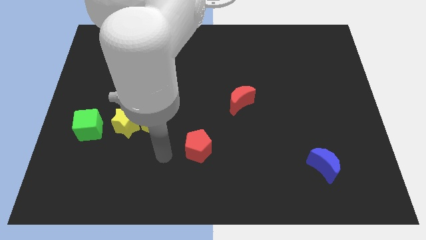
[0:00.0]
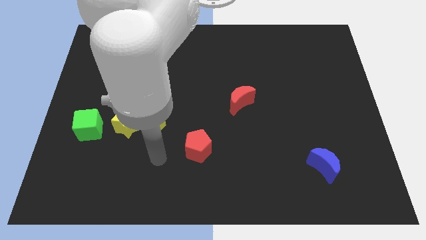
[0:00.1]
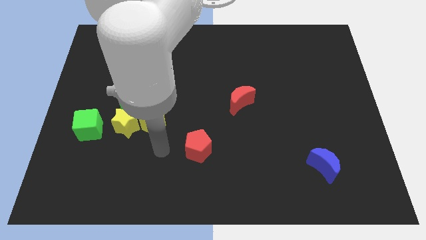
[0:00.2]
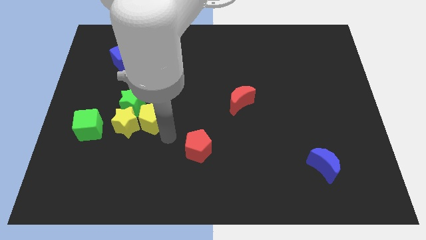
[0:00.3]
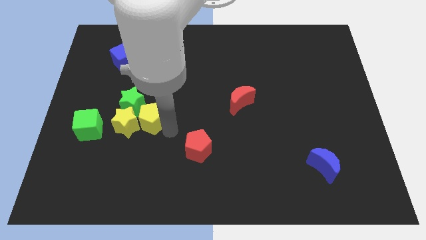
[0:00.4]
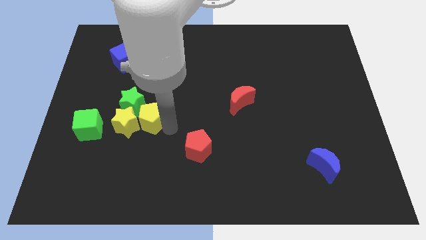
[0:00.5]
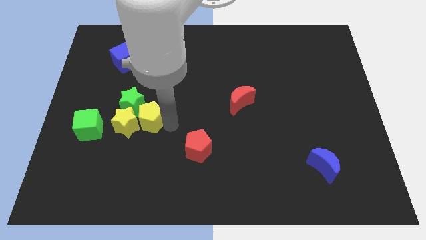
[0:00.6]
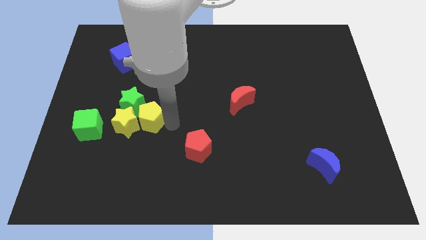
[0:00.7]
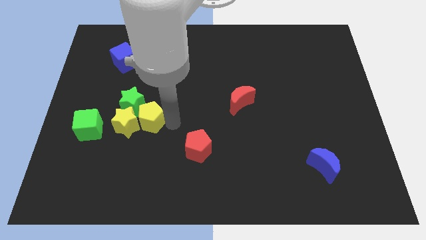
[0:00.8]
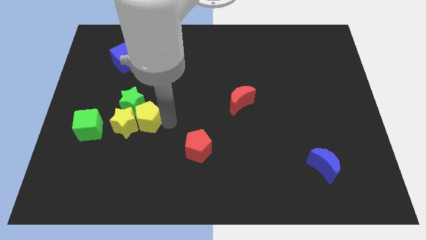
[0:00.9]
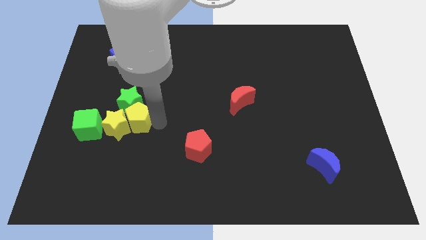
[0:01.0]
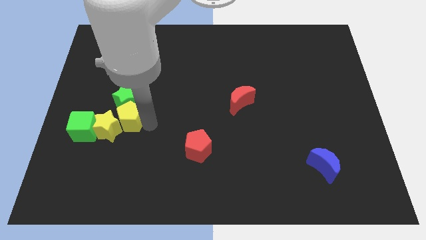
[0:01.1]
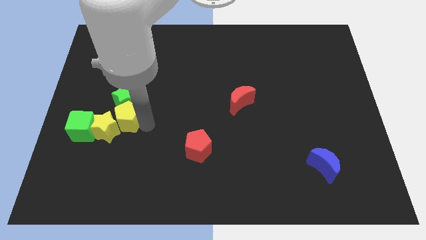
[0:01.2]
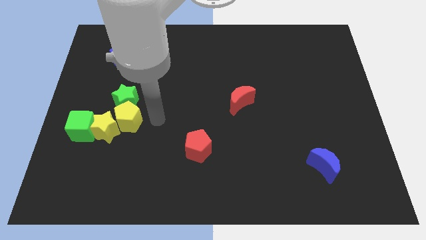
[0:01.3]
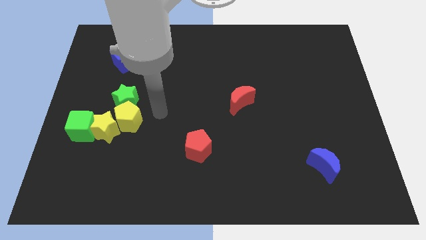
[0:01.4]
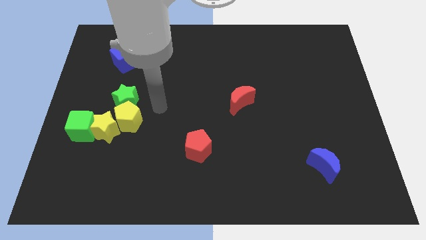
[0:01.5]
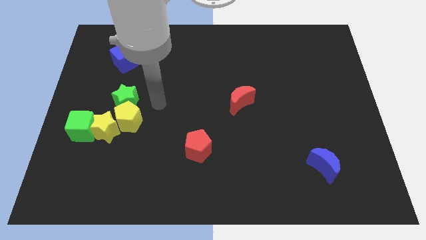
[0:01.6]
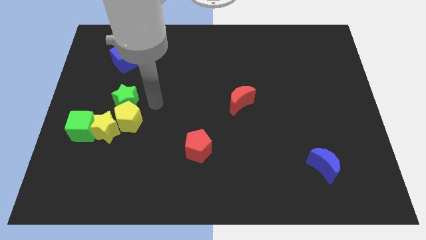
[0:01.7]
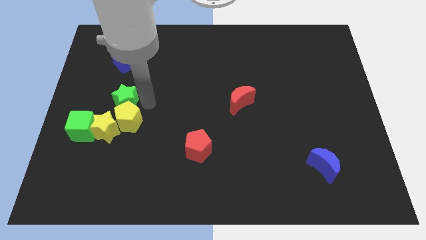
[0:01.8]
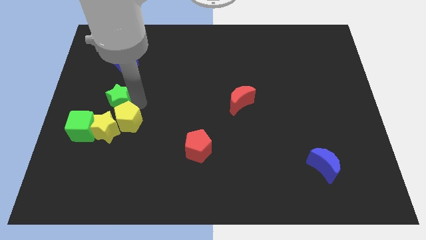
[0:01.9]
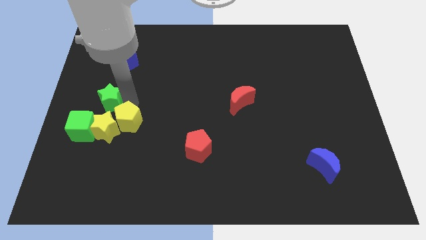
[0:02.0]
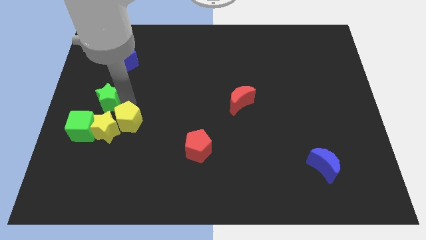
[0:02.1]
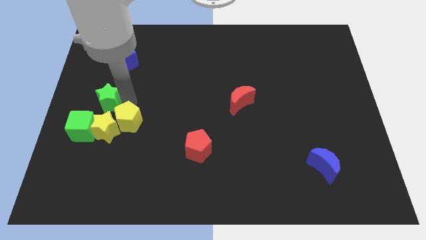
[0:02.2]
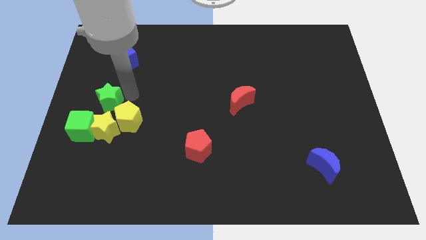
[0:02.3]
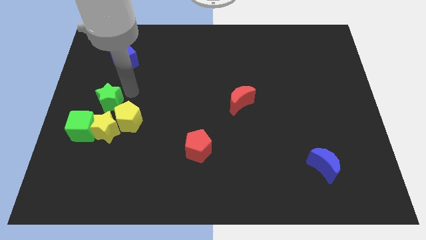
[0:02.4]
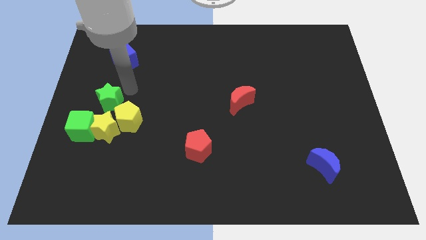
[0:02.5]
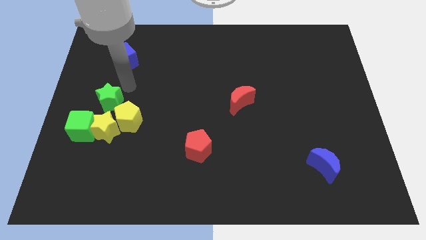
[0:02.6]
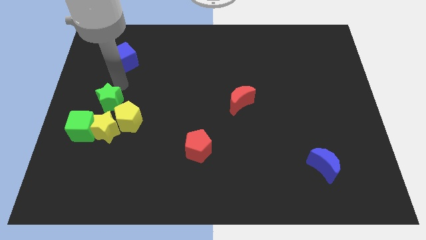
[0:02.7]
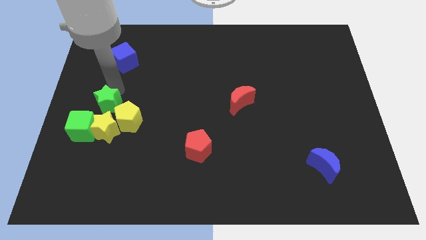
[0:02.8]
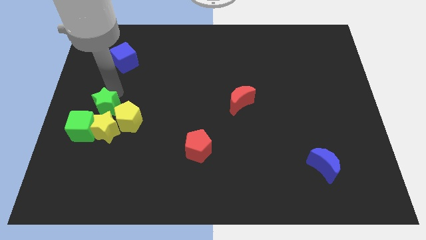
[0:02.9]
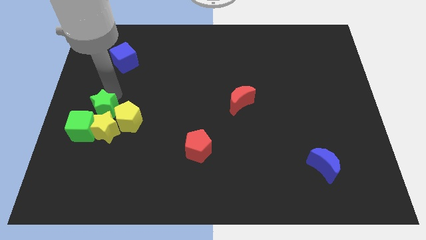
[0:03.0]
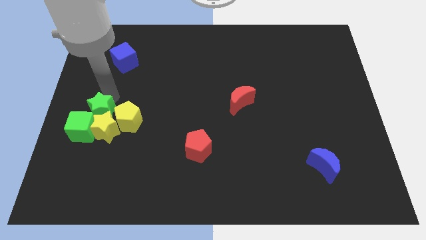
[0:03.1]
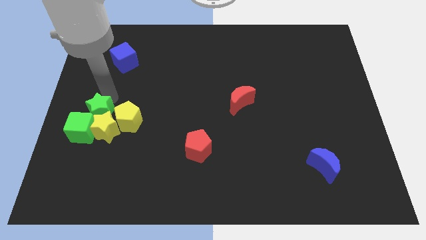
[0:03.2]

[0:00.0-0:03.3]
move the yellow blocks and green blocks to the center left

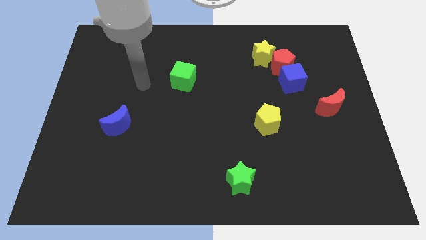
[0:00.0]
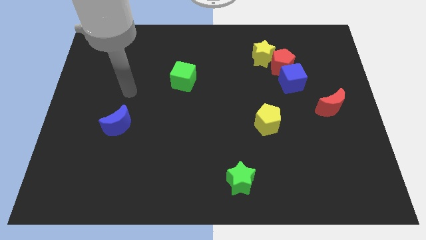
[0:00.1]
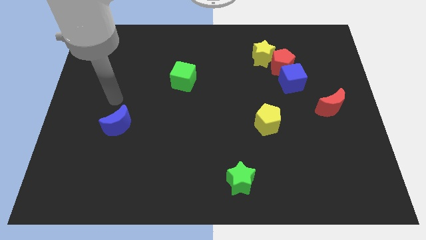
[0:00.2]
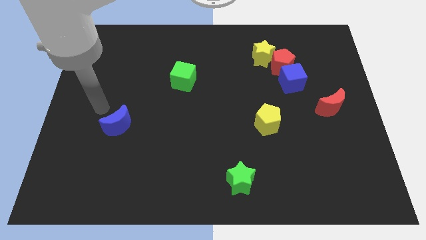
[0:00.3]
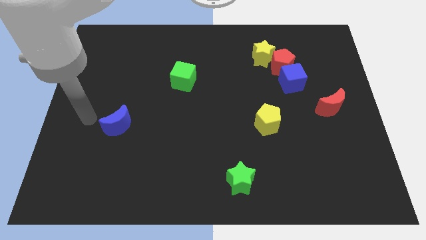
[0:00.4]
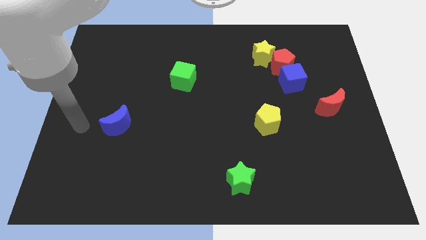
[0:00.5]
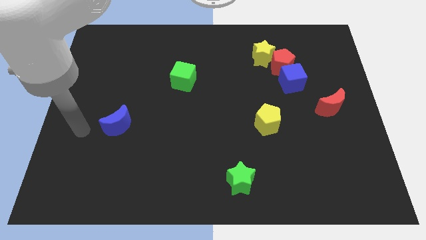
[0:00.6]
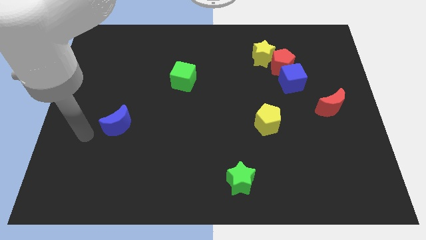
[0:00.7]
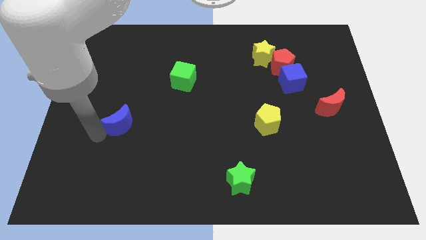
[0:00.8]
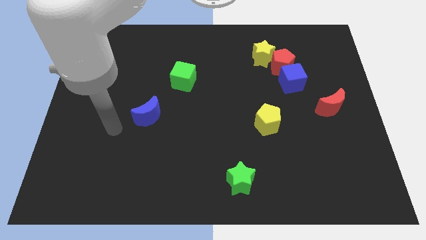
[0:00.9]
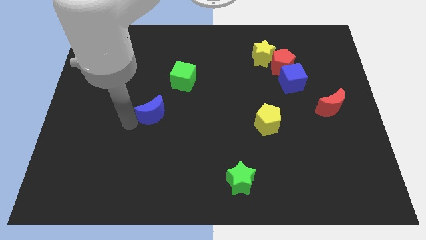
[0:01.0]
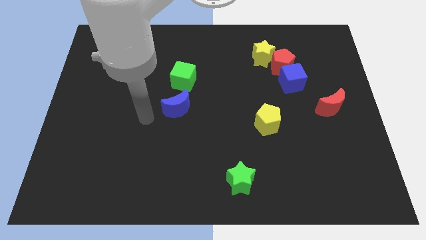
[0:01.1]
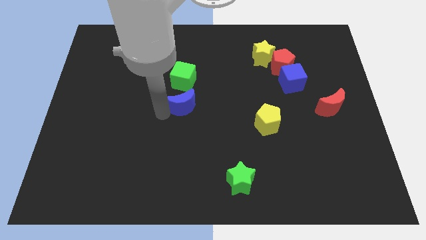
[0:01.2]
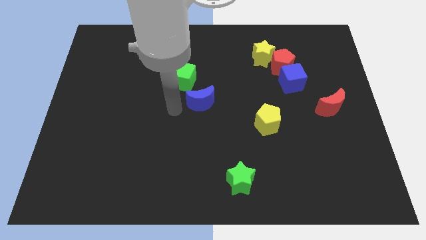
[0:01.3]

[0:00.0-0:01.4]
place the blue semicircle below the green cube

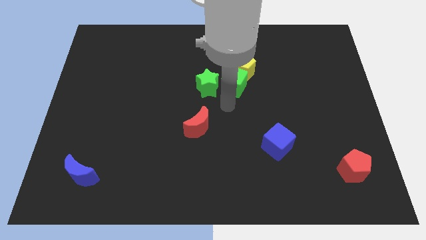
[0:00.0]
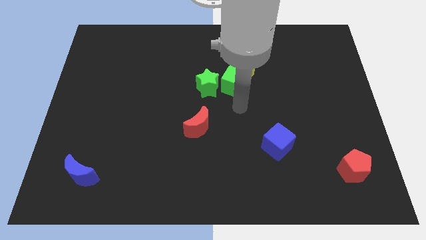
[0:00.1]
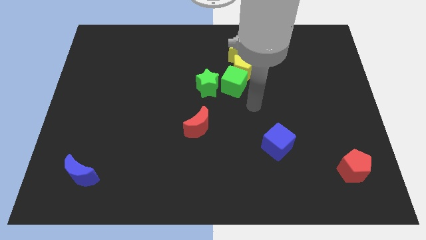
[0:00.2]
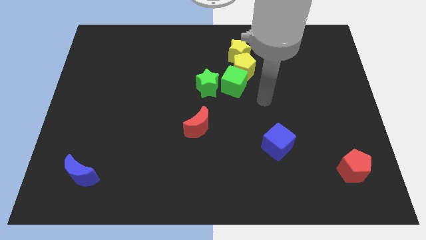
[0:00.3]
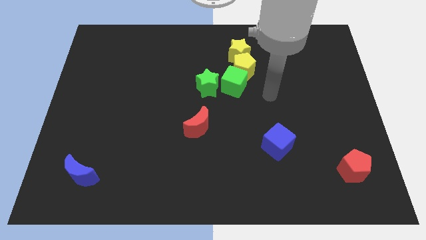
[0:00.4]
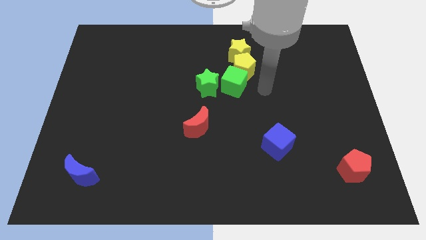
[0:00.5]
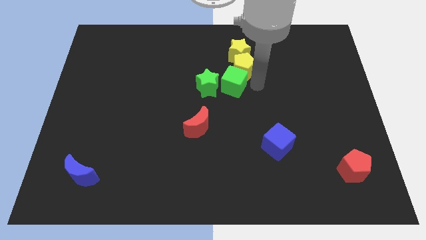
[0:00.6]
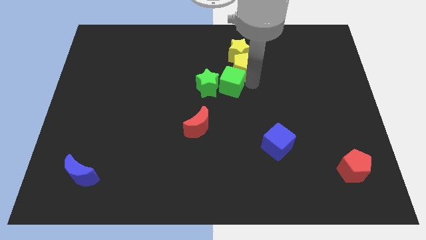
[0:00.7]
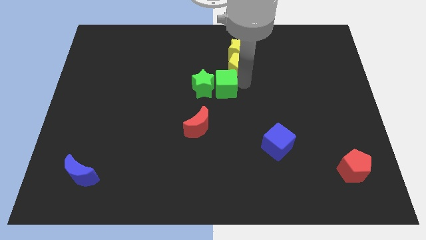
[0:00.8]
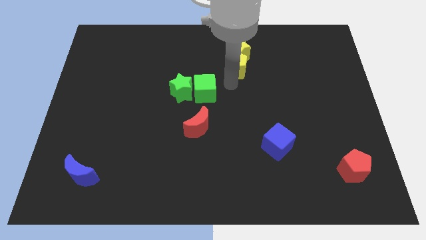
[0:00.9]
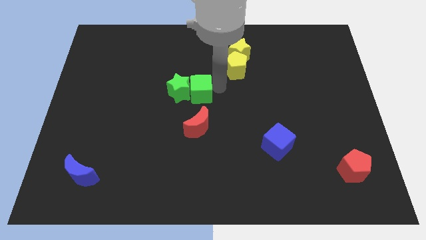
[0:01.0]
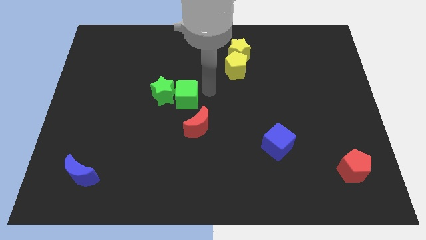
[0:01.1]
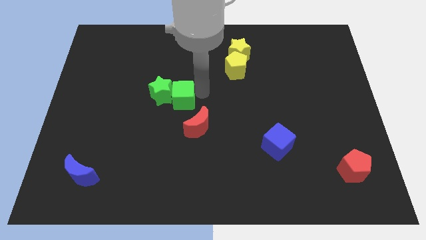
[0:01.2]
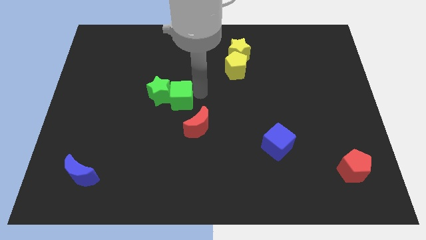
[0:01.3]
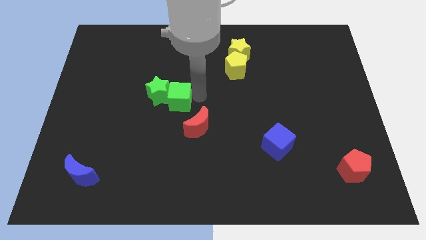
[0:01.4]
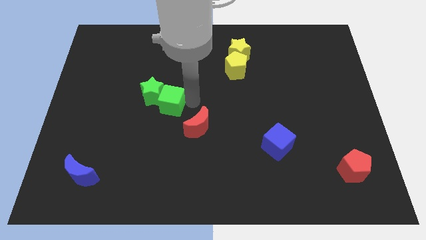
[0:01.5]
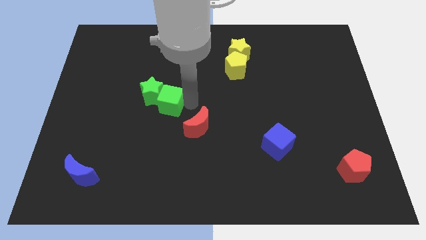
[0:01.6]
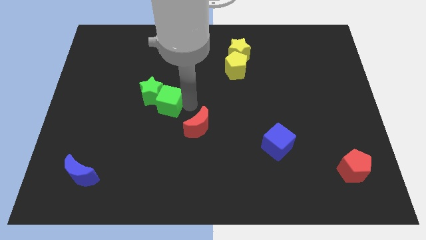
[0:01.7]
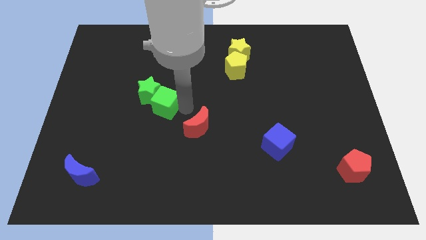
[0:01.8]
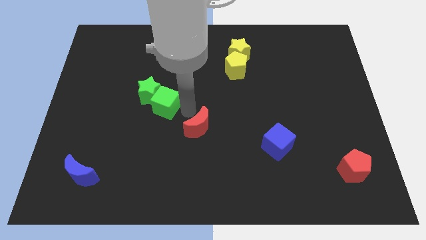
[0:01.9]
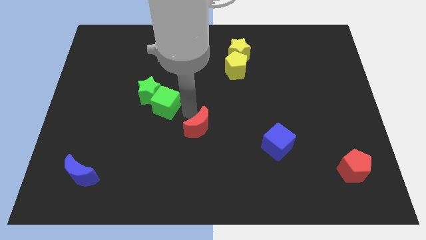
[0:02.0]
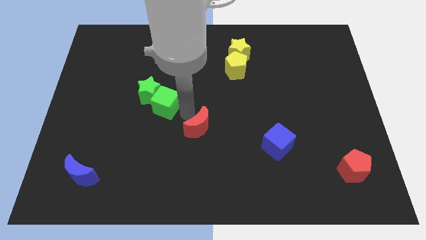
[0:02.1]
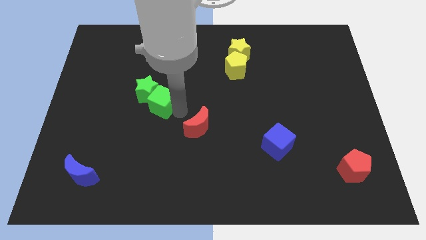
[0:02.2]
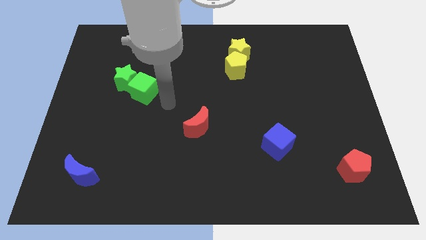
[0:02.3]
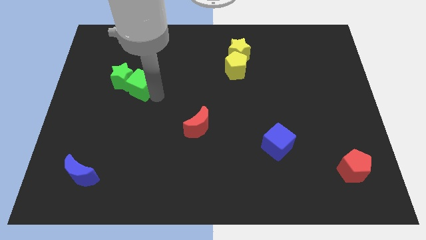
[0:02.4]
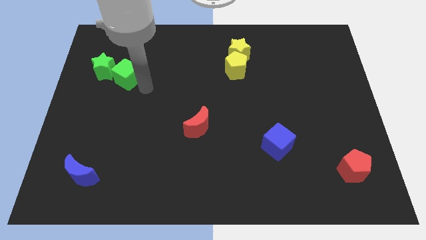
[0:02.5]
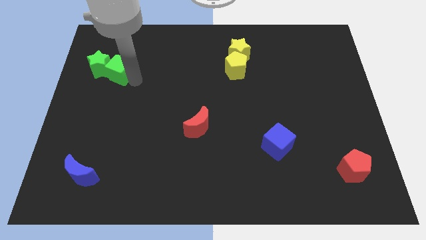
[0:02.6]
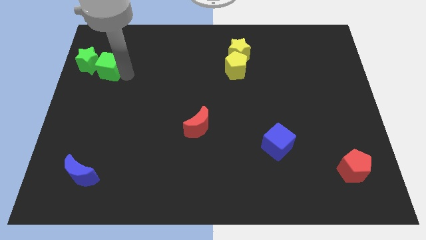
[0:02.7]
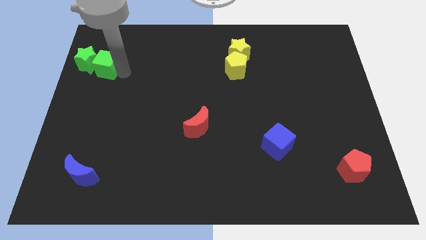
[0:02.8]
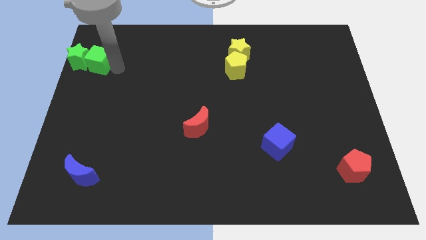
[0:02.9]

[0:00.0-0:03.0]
put the green blocks diagonally top left to the red moon

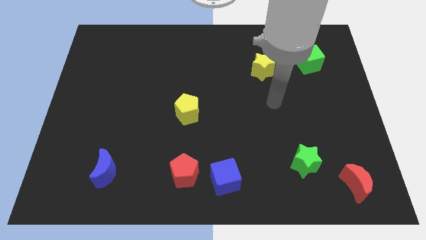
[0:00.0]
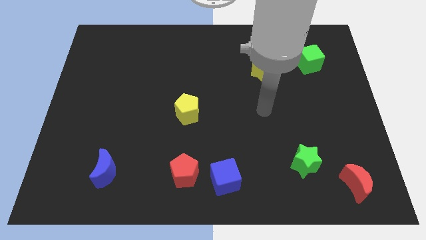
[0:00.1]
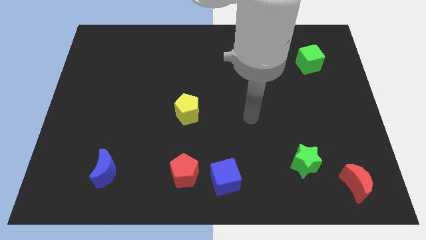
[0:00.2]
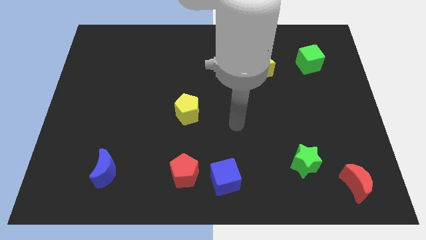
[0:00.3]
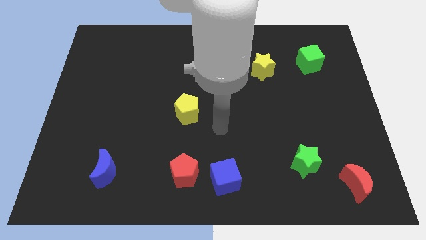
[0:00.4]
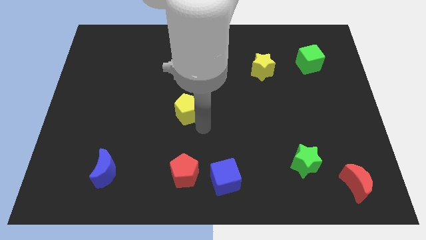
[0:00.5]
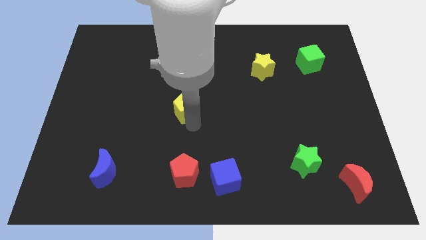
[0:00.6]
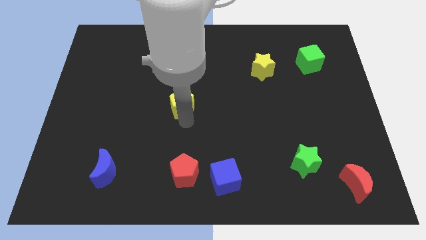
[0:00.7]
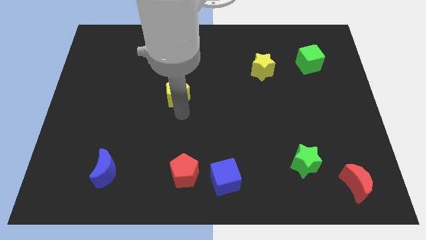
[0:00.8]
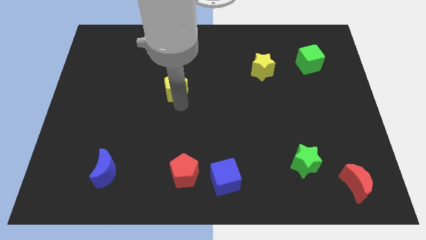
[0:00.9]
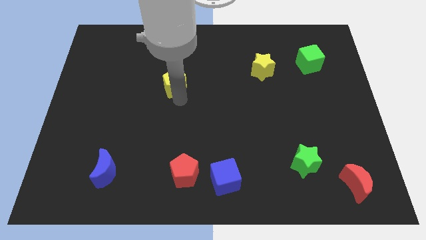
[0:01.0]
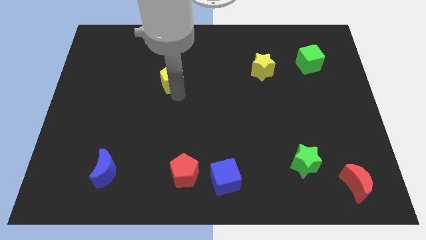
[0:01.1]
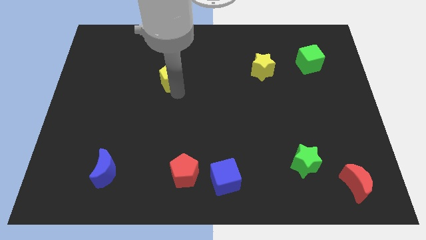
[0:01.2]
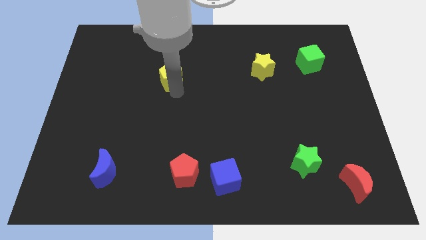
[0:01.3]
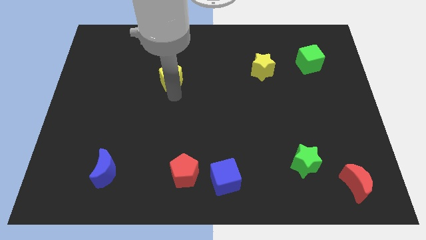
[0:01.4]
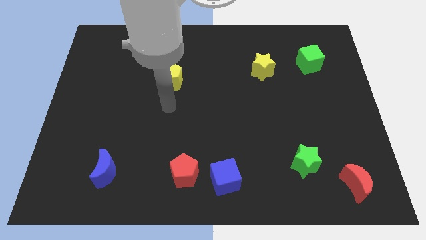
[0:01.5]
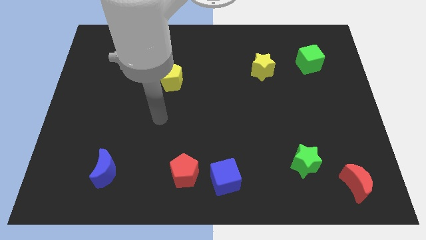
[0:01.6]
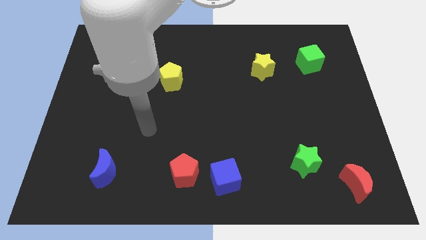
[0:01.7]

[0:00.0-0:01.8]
push the yellow pentagon towards the top left
